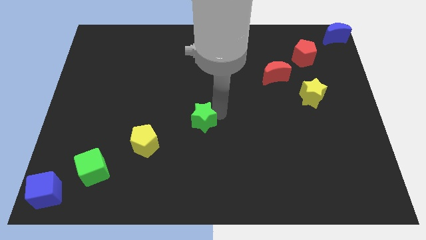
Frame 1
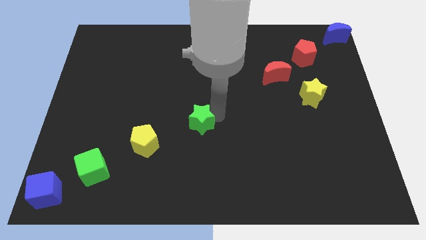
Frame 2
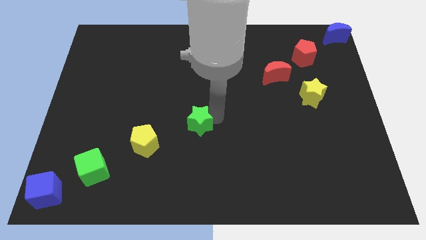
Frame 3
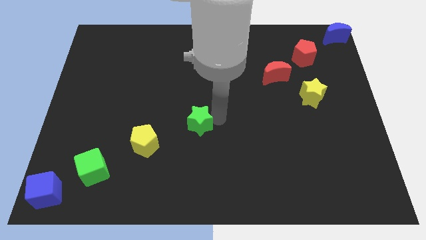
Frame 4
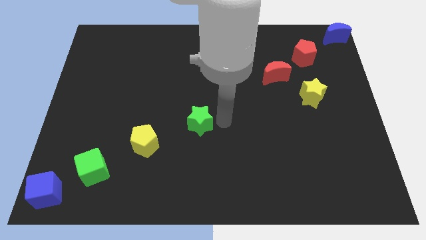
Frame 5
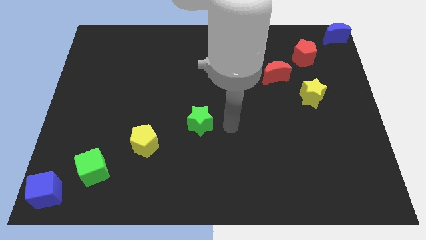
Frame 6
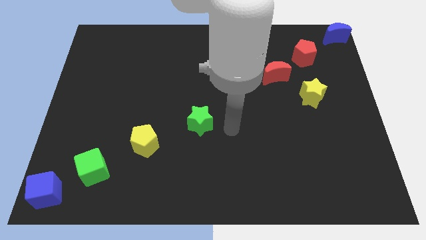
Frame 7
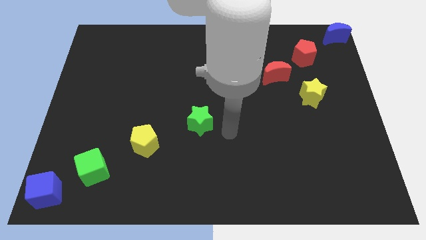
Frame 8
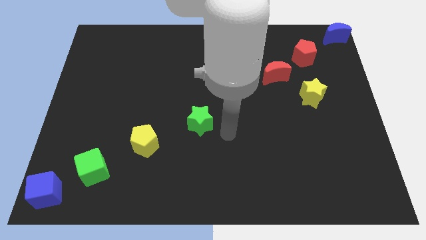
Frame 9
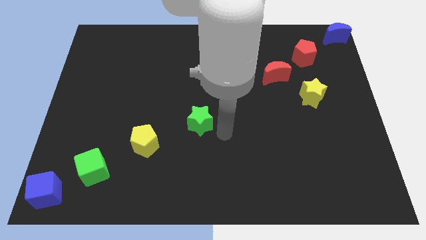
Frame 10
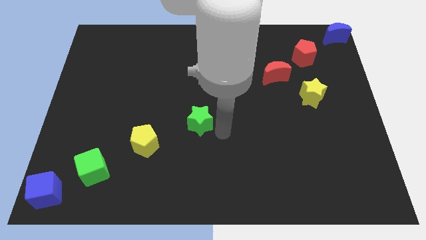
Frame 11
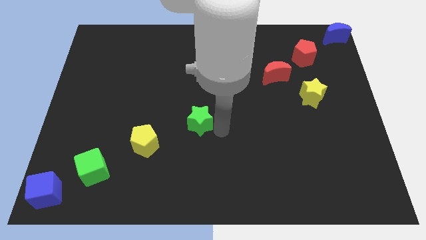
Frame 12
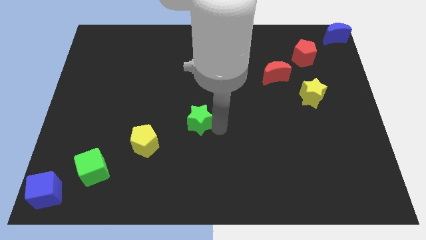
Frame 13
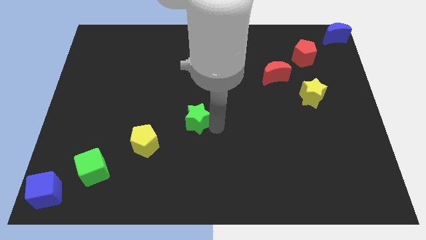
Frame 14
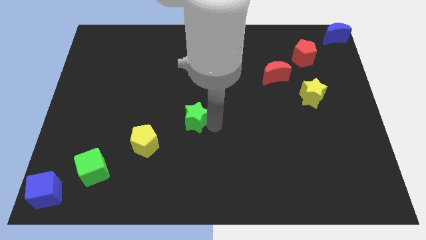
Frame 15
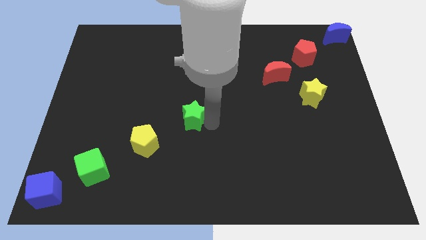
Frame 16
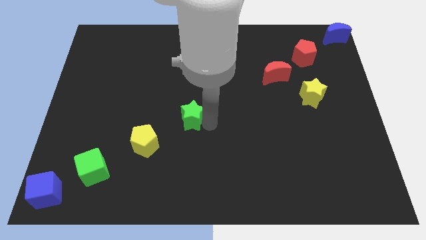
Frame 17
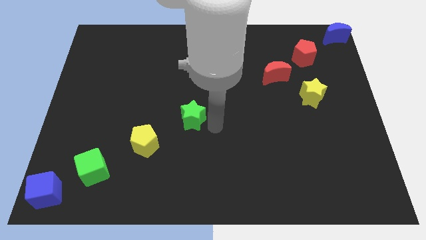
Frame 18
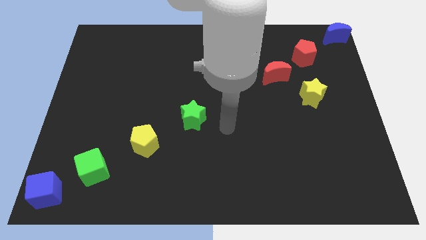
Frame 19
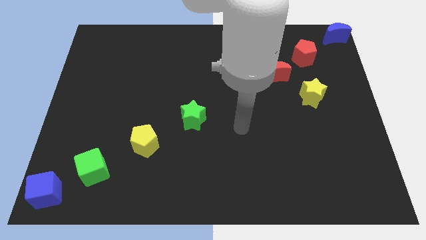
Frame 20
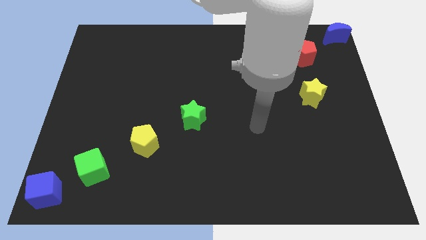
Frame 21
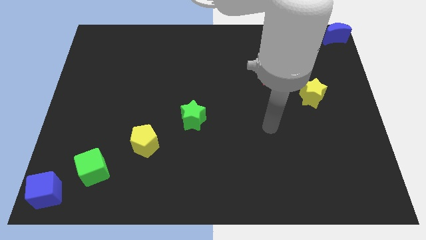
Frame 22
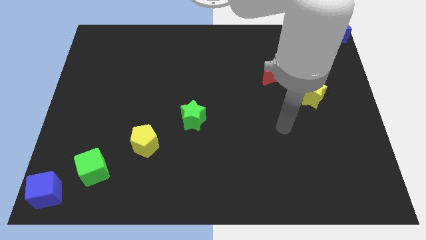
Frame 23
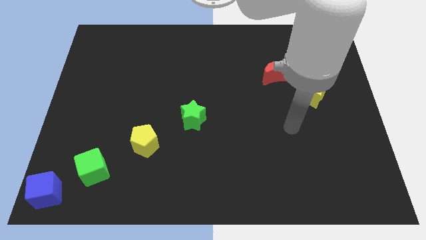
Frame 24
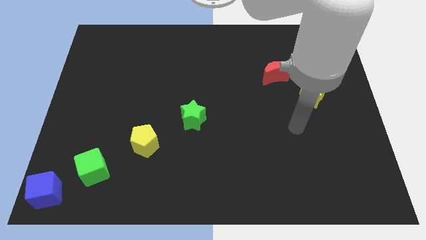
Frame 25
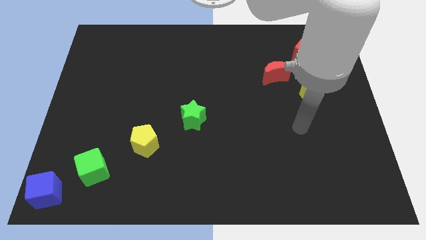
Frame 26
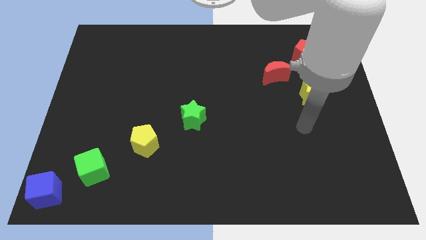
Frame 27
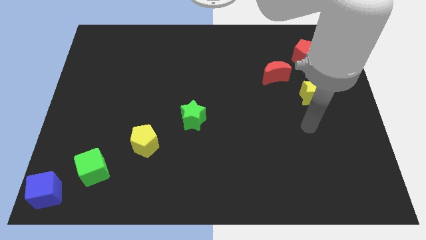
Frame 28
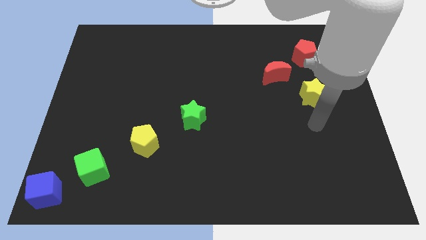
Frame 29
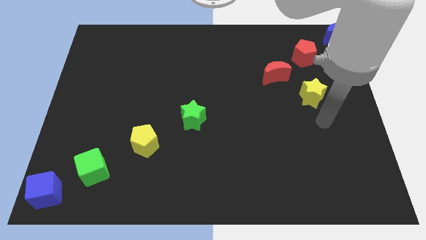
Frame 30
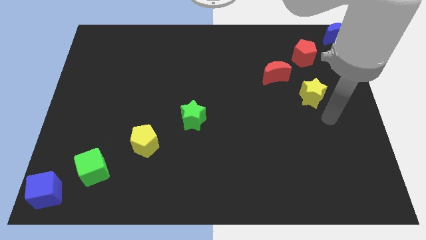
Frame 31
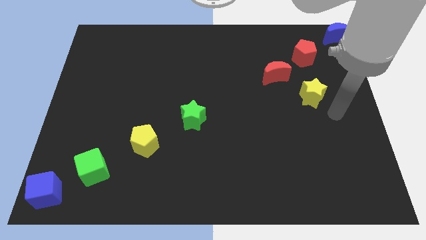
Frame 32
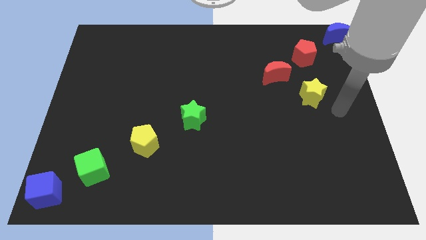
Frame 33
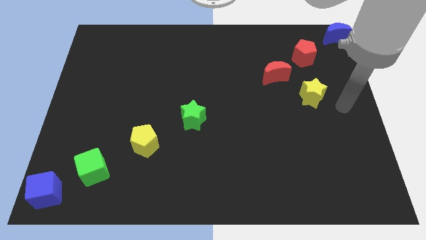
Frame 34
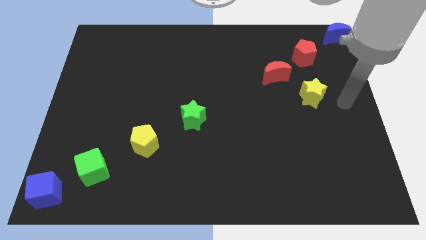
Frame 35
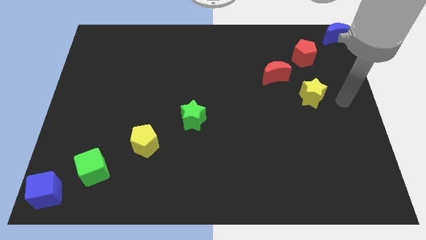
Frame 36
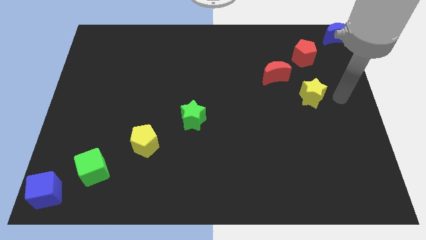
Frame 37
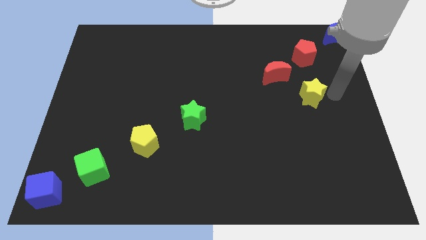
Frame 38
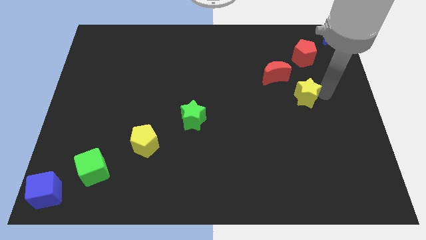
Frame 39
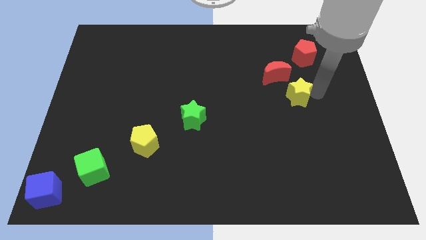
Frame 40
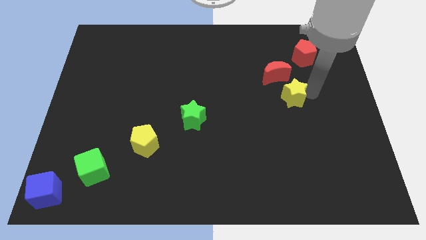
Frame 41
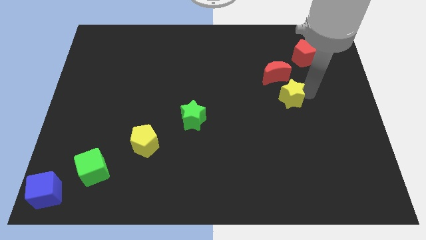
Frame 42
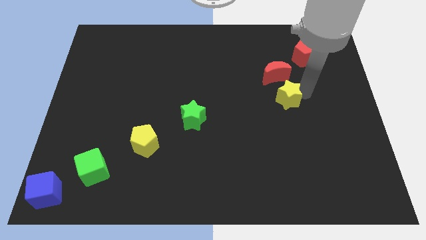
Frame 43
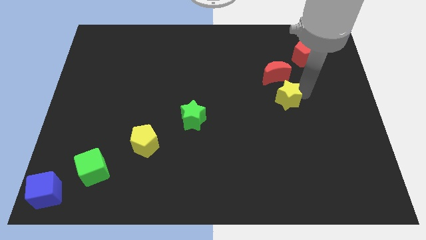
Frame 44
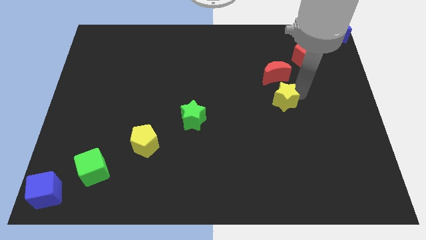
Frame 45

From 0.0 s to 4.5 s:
move the yellow star underneath the red moon

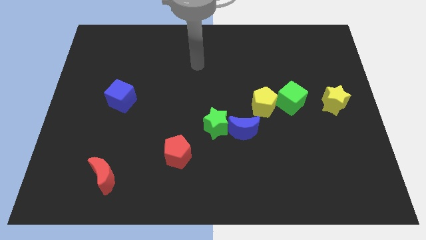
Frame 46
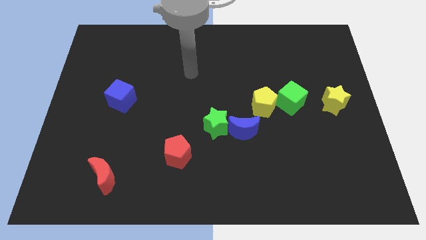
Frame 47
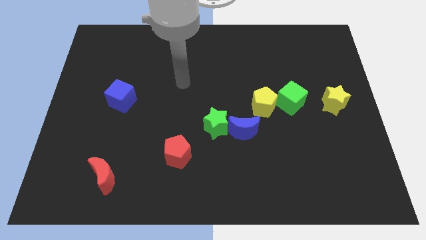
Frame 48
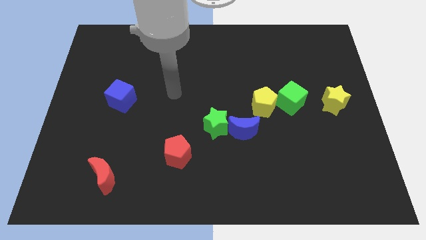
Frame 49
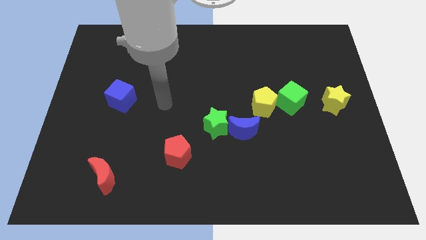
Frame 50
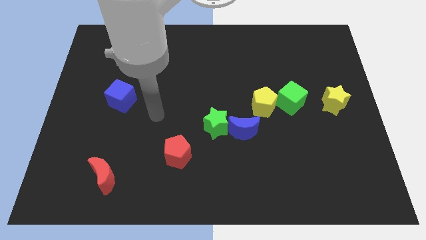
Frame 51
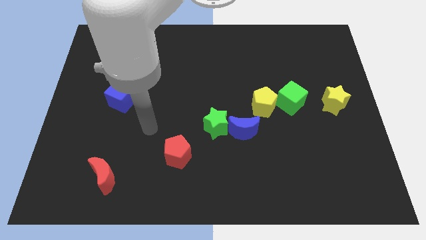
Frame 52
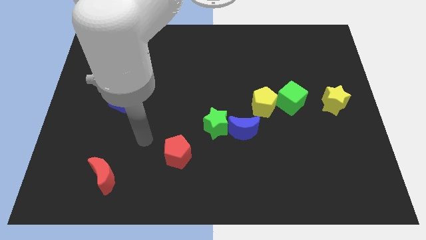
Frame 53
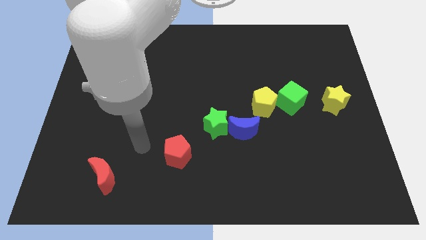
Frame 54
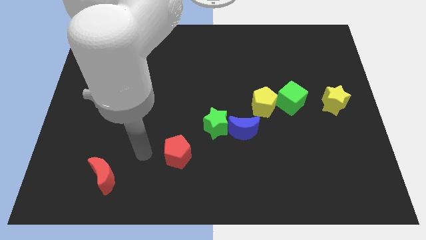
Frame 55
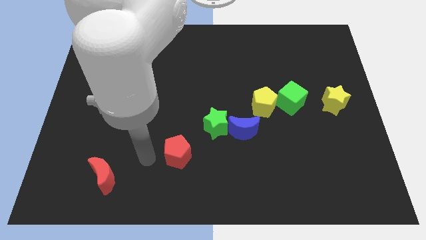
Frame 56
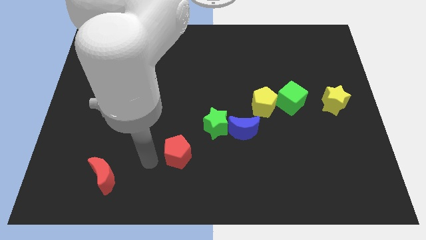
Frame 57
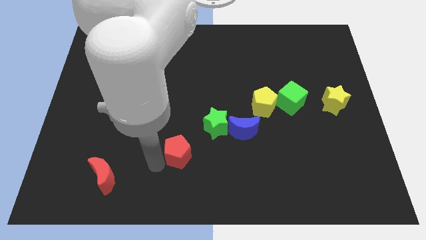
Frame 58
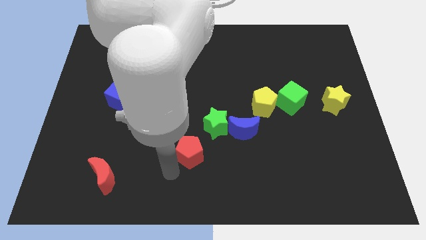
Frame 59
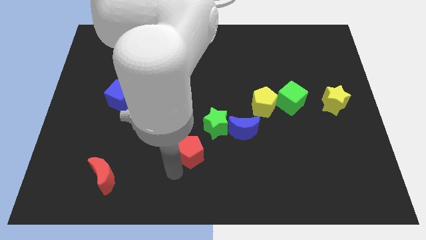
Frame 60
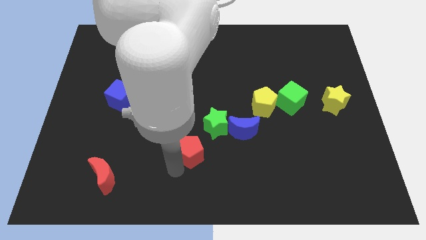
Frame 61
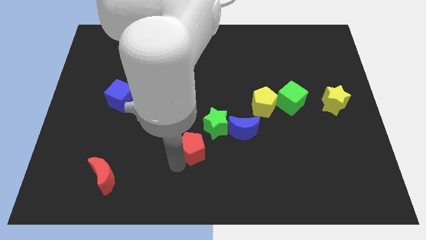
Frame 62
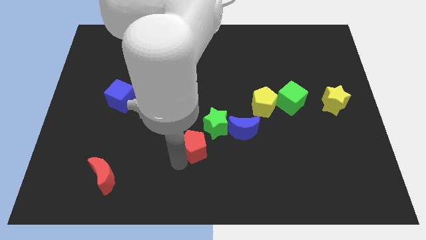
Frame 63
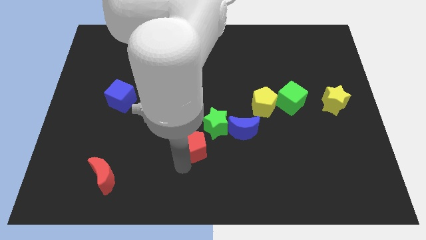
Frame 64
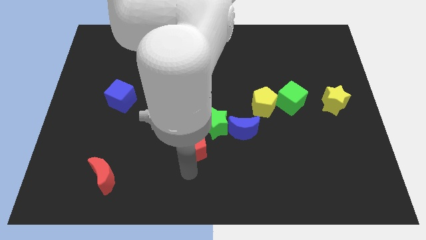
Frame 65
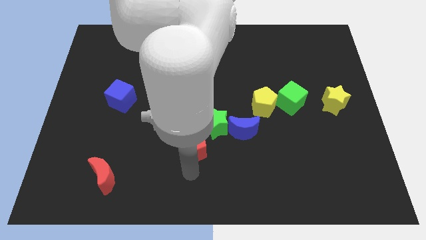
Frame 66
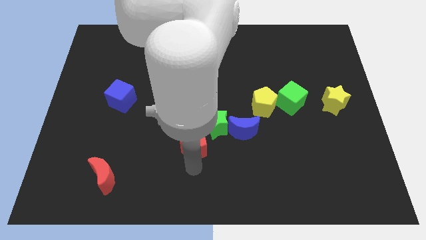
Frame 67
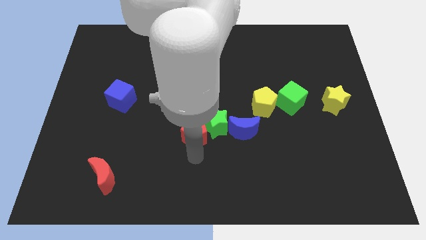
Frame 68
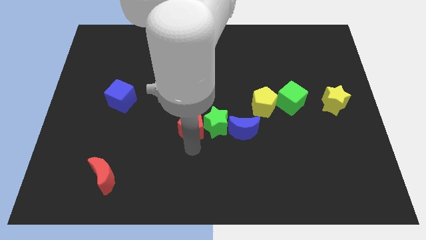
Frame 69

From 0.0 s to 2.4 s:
move the red pentagon to the left of green star

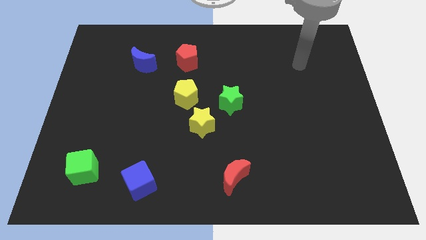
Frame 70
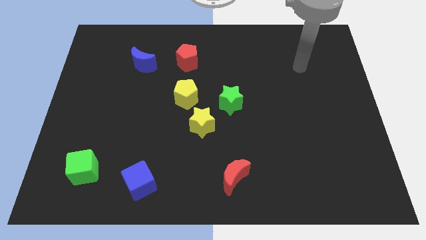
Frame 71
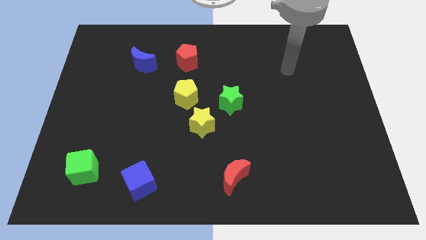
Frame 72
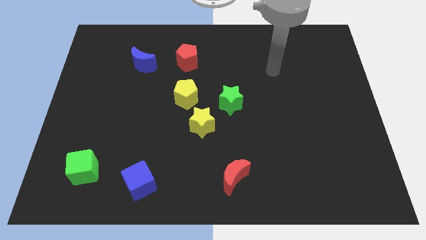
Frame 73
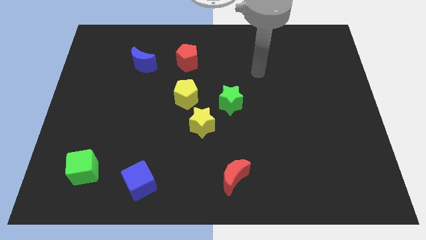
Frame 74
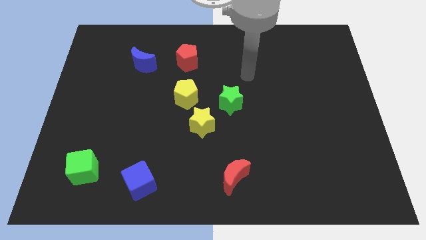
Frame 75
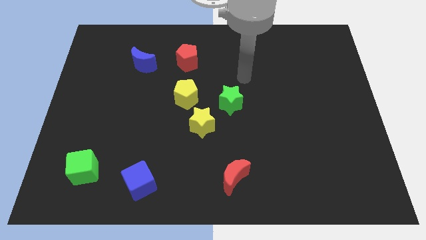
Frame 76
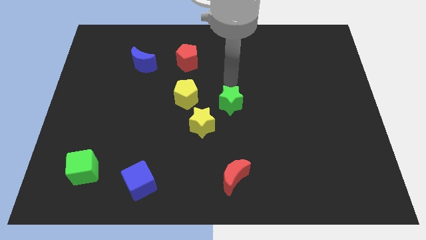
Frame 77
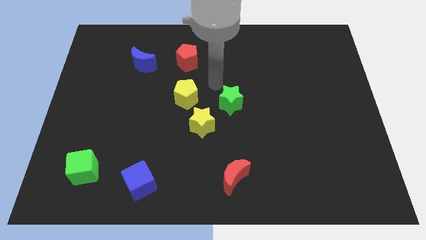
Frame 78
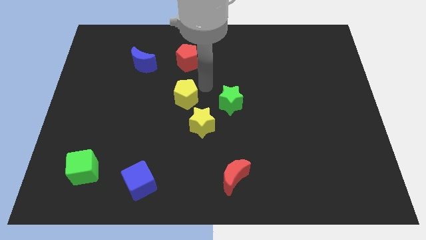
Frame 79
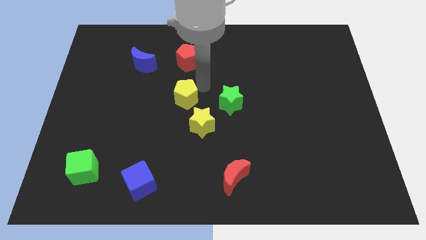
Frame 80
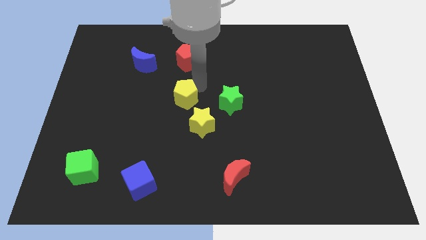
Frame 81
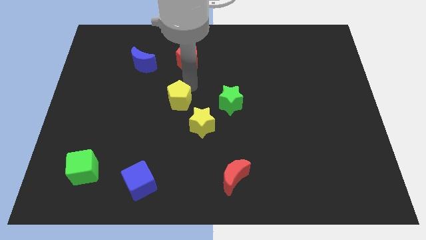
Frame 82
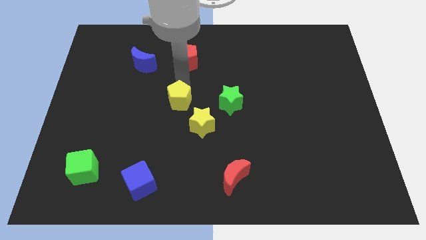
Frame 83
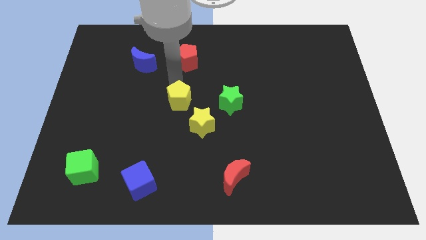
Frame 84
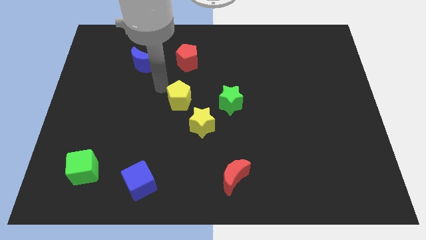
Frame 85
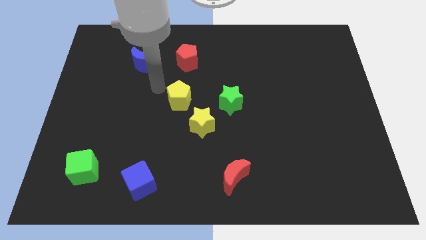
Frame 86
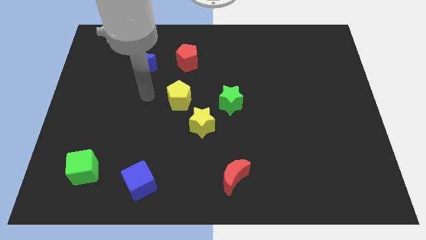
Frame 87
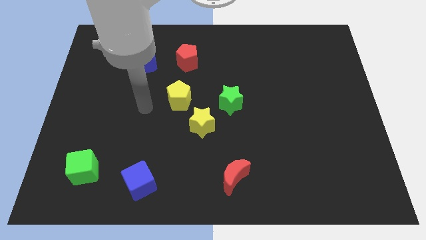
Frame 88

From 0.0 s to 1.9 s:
slightly push the yellow pentagon towards the left side of the board
